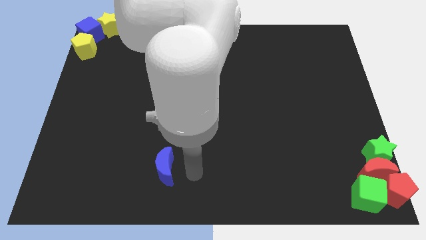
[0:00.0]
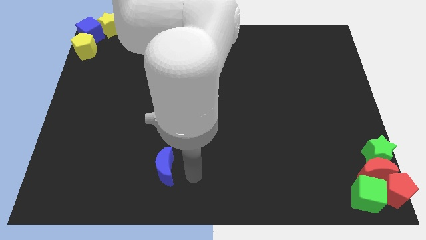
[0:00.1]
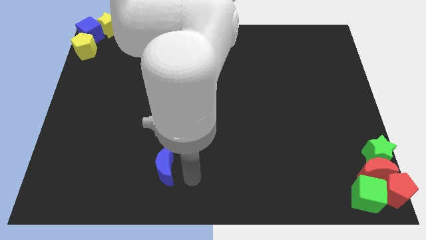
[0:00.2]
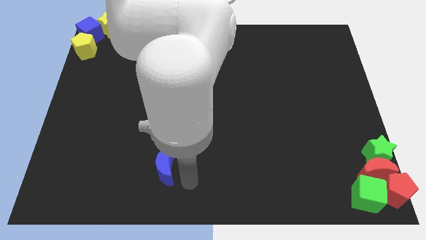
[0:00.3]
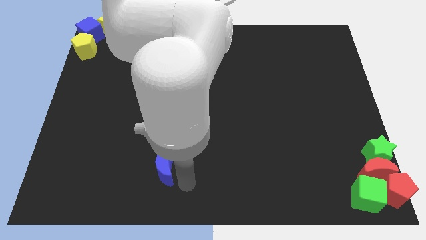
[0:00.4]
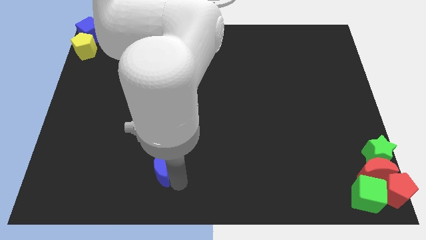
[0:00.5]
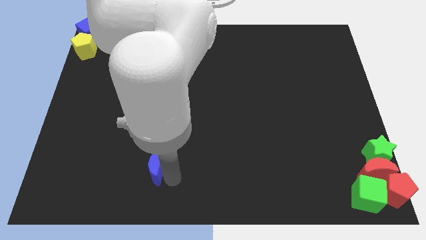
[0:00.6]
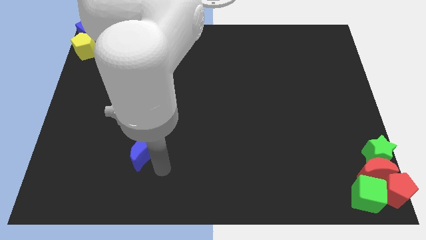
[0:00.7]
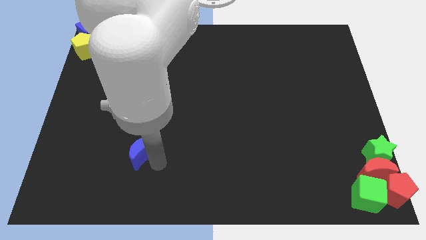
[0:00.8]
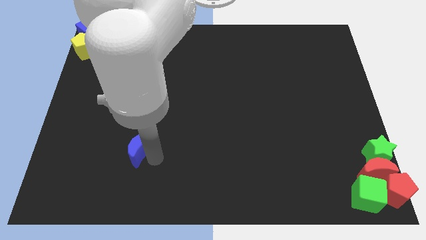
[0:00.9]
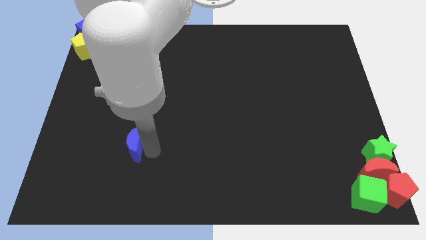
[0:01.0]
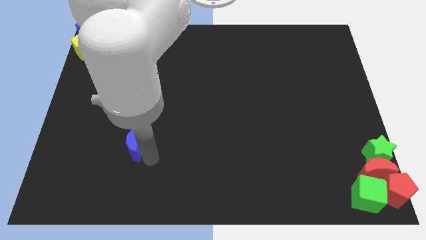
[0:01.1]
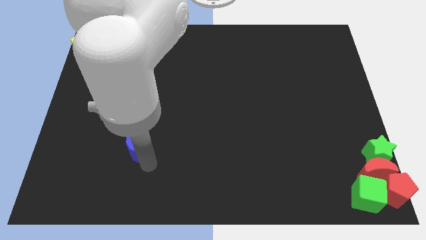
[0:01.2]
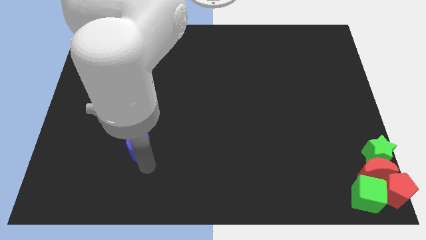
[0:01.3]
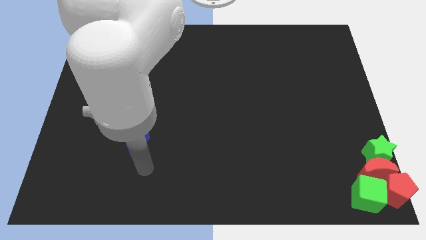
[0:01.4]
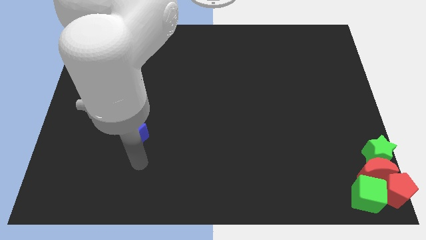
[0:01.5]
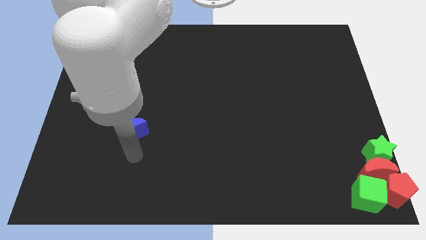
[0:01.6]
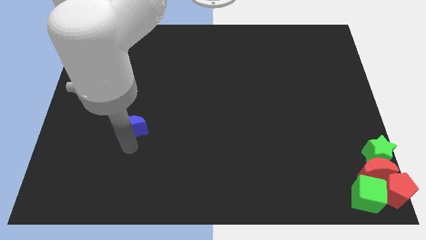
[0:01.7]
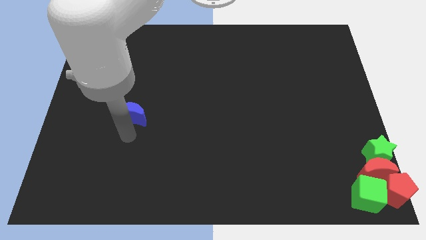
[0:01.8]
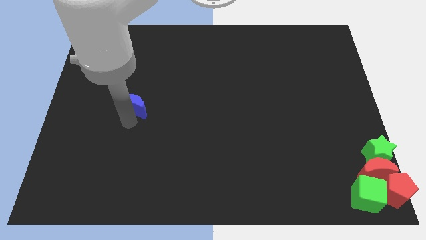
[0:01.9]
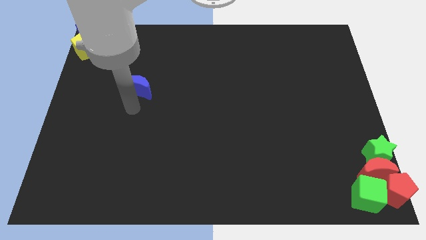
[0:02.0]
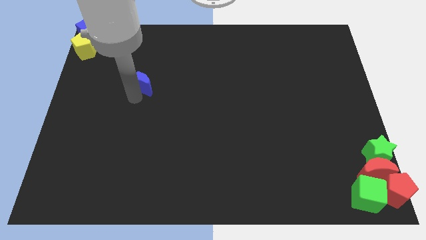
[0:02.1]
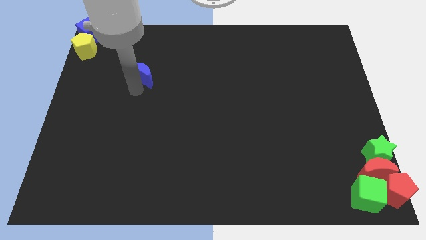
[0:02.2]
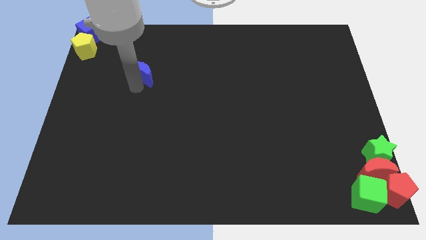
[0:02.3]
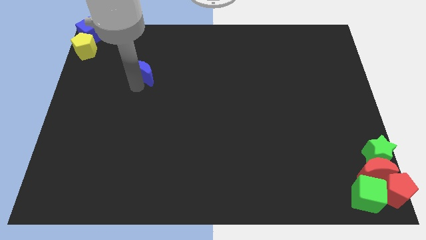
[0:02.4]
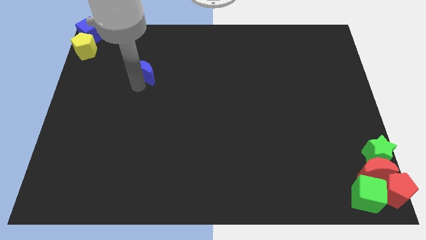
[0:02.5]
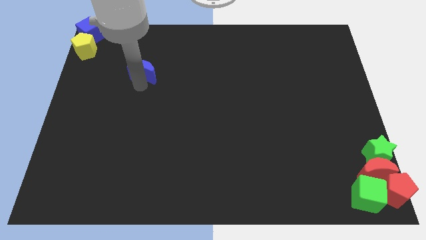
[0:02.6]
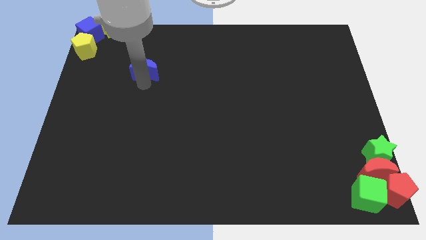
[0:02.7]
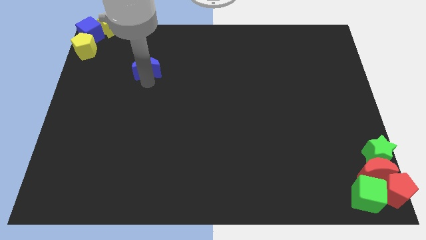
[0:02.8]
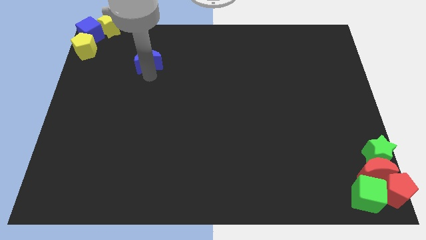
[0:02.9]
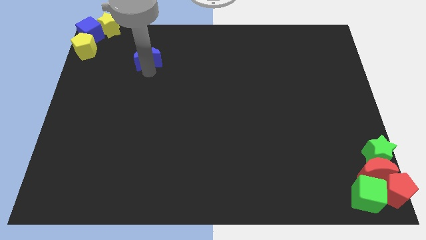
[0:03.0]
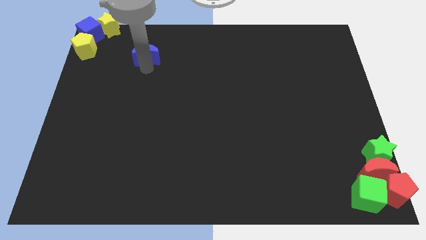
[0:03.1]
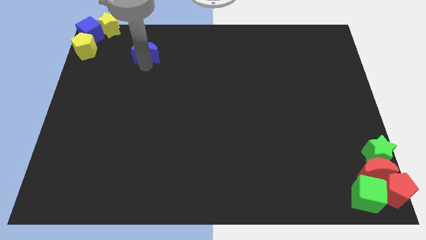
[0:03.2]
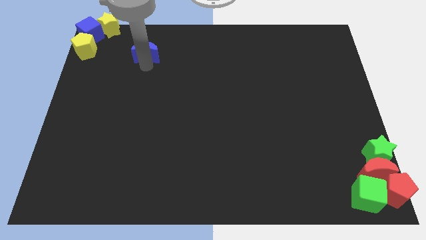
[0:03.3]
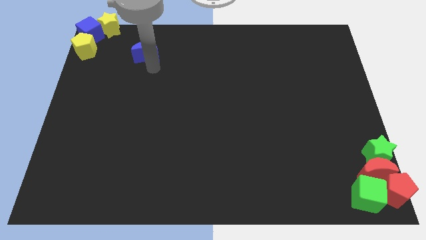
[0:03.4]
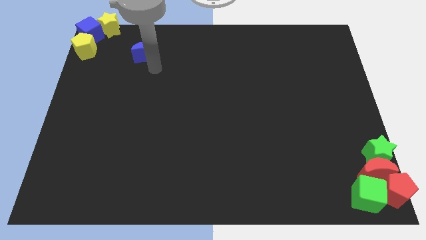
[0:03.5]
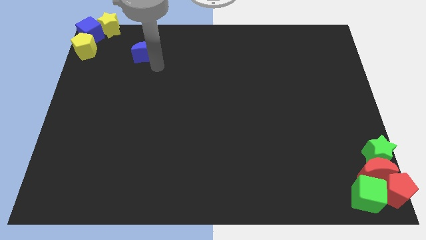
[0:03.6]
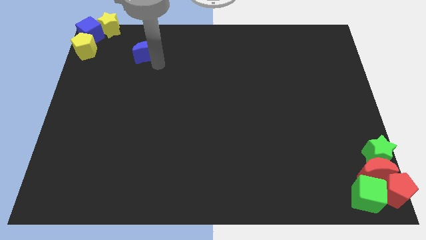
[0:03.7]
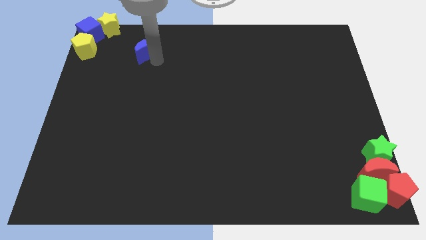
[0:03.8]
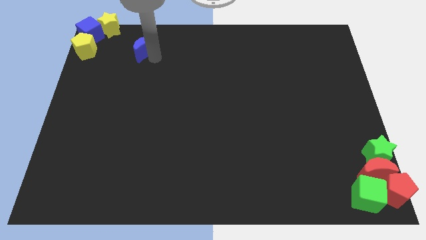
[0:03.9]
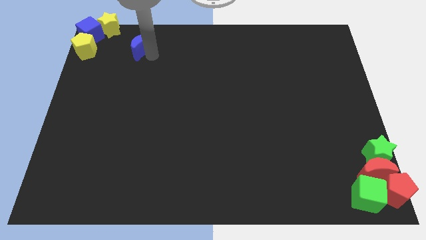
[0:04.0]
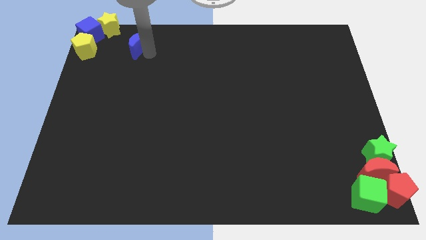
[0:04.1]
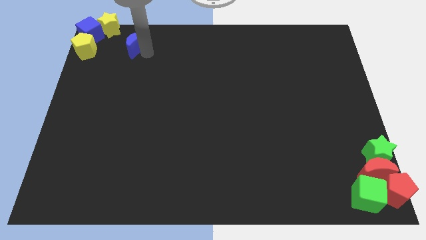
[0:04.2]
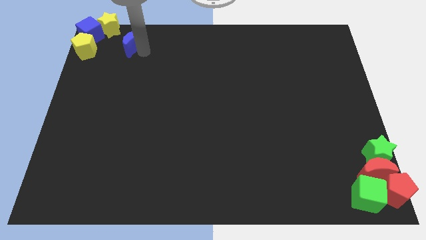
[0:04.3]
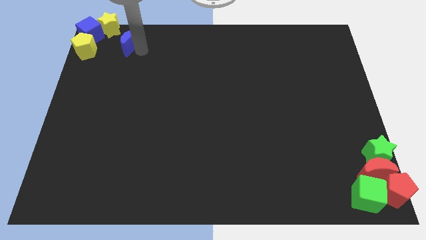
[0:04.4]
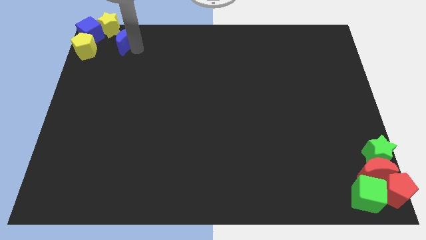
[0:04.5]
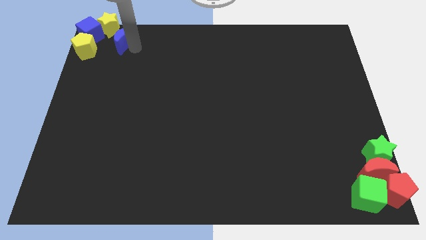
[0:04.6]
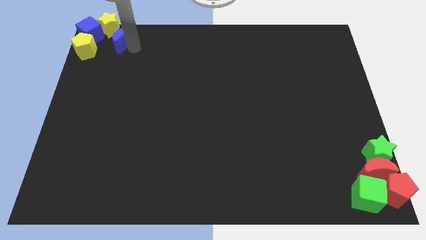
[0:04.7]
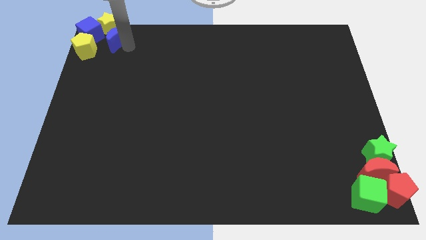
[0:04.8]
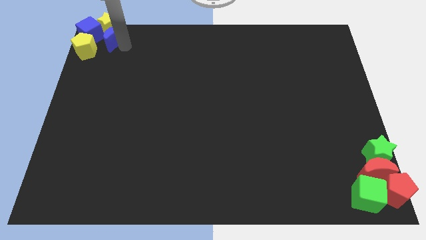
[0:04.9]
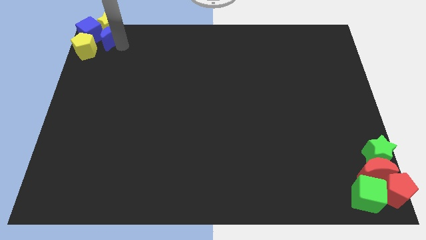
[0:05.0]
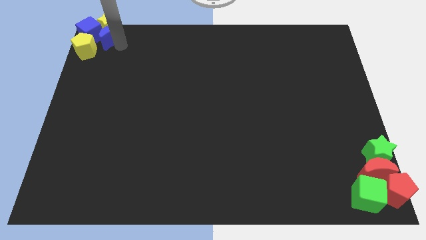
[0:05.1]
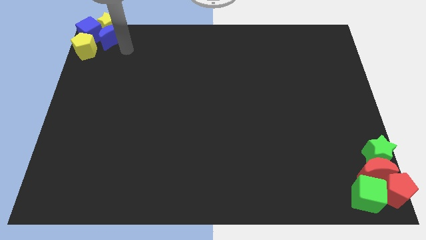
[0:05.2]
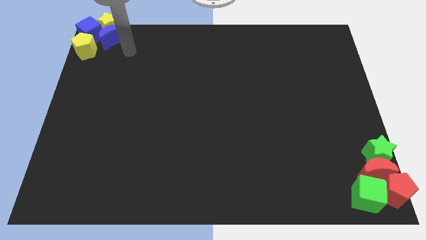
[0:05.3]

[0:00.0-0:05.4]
push the blue crescent into the yellow star at the top left corner of the board

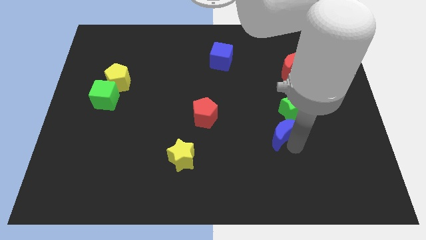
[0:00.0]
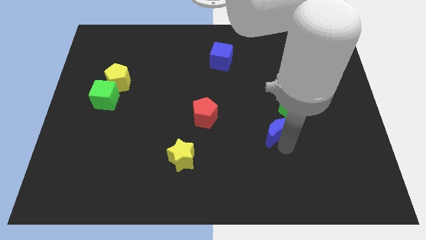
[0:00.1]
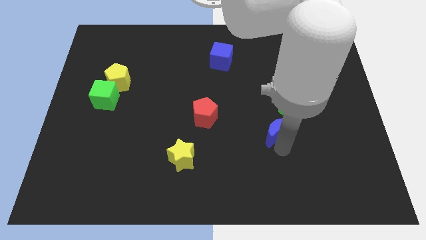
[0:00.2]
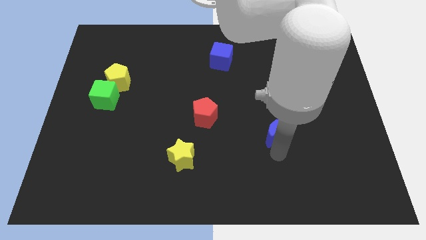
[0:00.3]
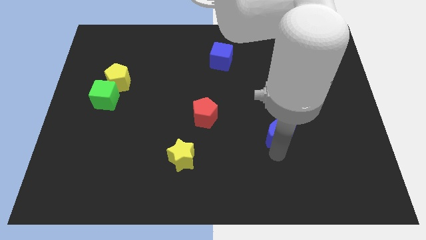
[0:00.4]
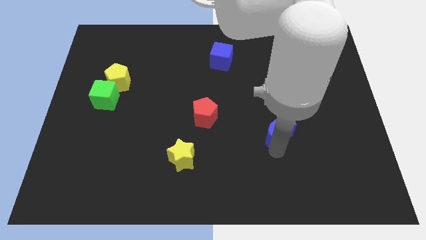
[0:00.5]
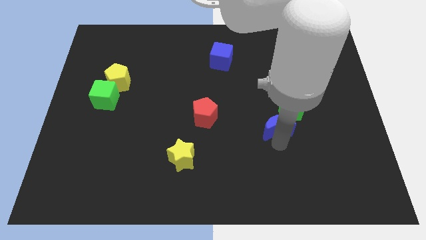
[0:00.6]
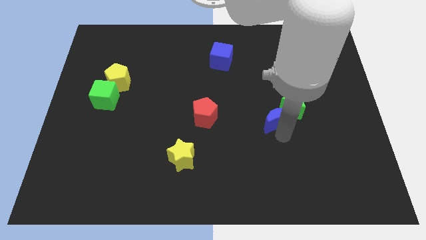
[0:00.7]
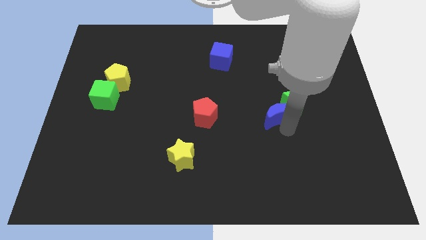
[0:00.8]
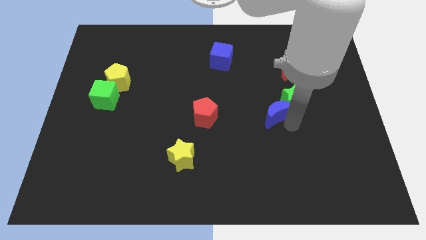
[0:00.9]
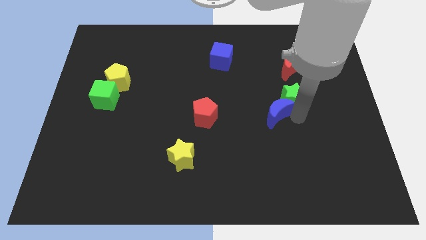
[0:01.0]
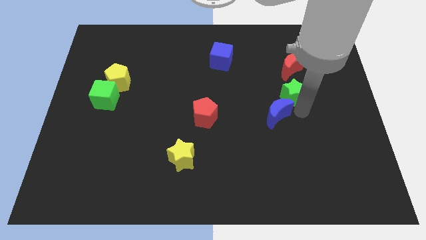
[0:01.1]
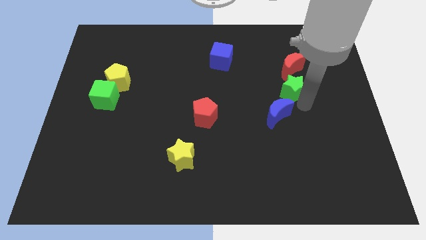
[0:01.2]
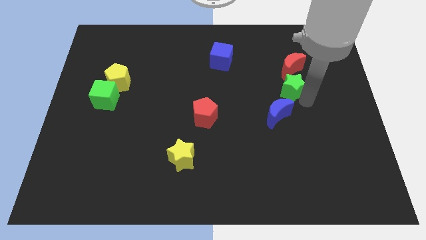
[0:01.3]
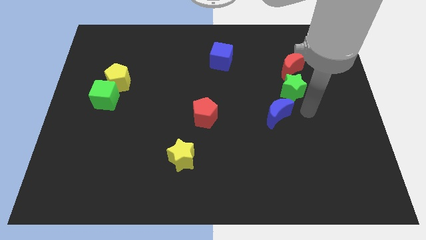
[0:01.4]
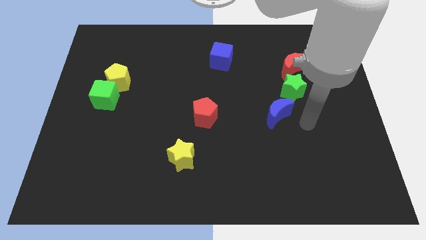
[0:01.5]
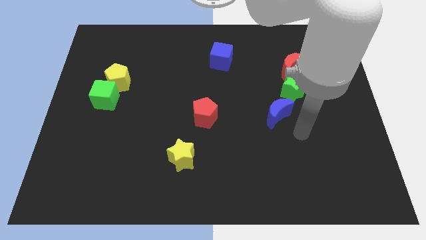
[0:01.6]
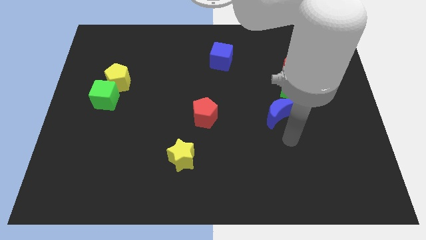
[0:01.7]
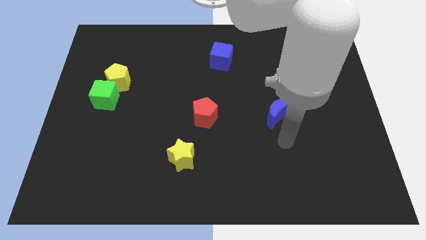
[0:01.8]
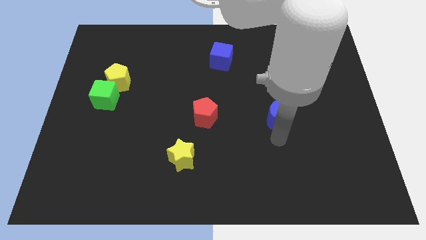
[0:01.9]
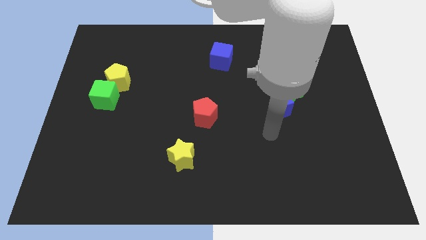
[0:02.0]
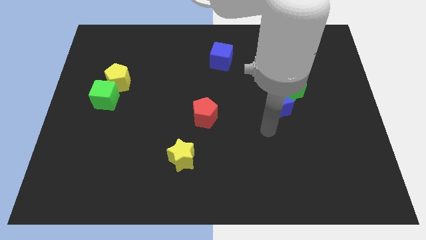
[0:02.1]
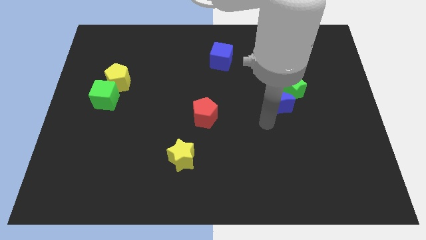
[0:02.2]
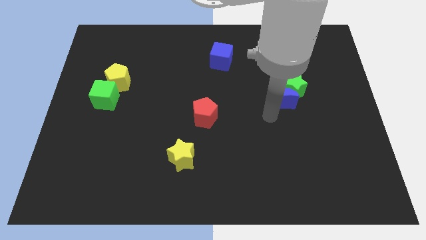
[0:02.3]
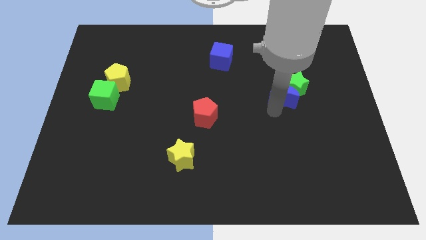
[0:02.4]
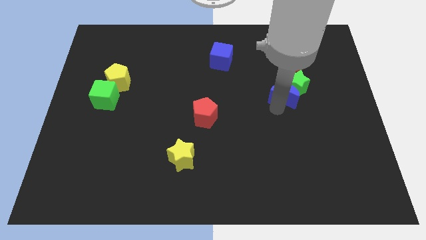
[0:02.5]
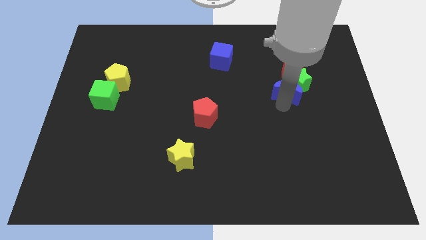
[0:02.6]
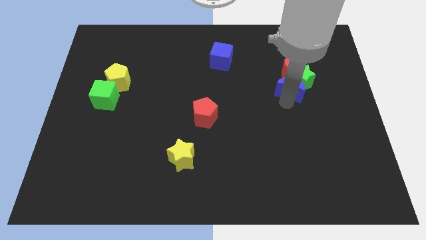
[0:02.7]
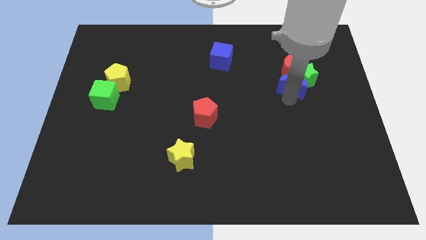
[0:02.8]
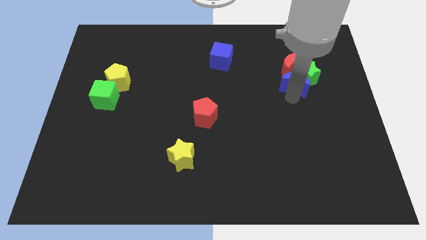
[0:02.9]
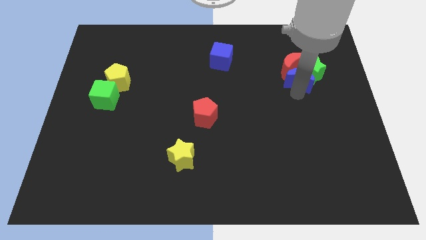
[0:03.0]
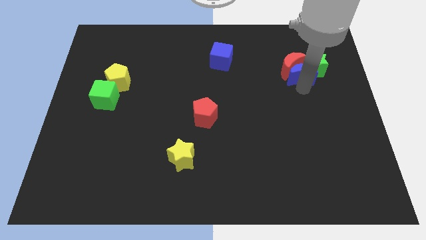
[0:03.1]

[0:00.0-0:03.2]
push blue crescent into the red crescent and green star

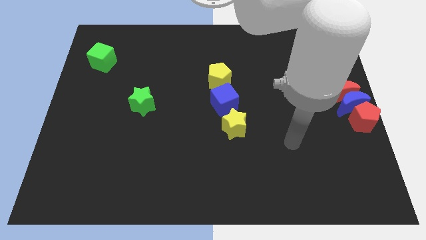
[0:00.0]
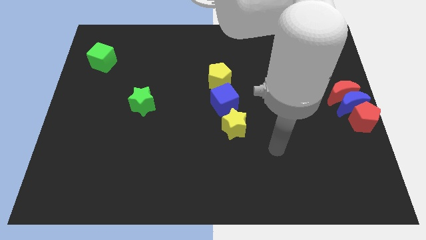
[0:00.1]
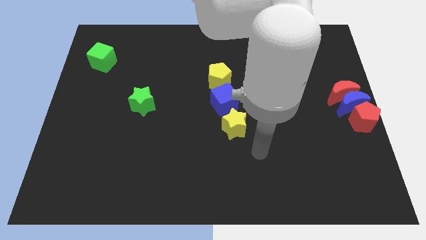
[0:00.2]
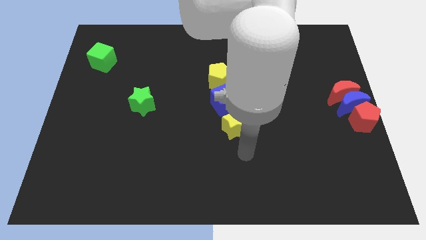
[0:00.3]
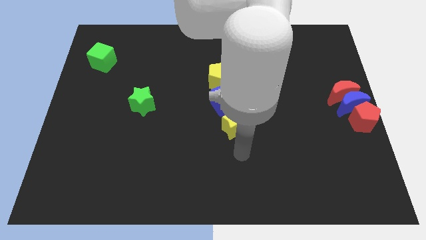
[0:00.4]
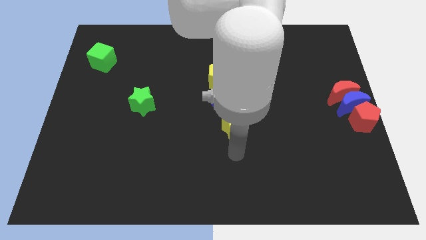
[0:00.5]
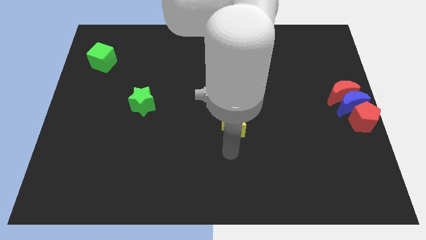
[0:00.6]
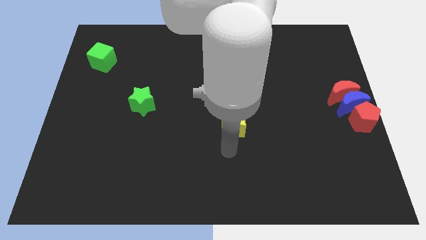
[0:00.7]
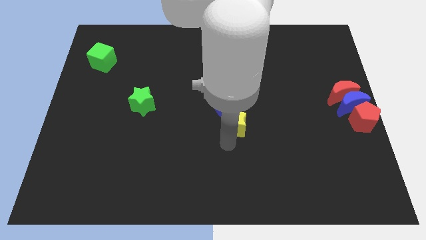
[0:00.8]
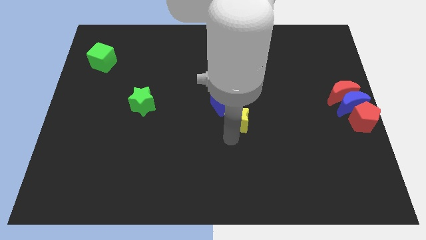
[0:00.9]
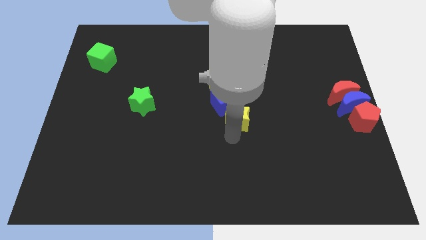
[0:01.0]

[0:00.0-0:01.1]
touch the bottom of the yellow star
